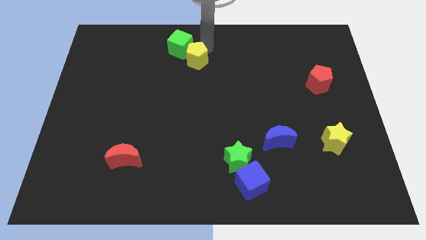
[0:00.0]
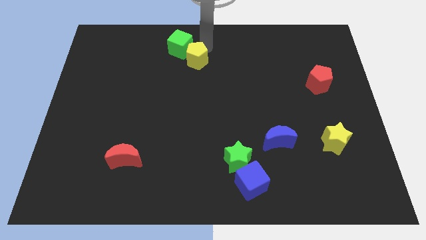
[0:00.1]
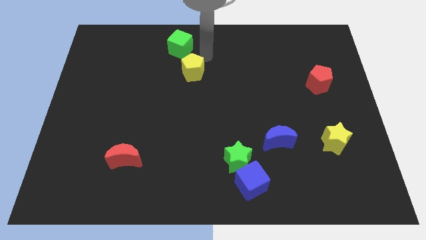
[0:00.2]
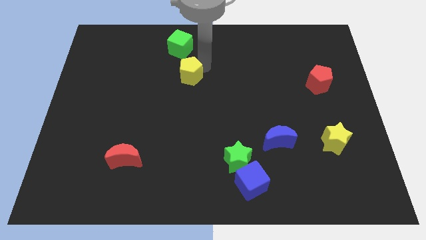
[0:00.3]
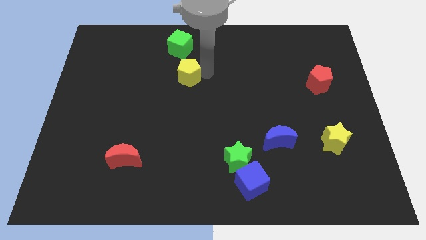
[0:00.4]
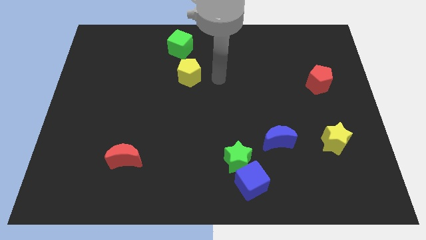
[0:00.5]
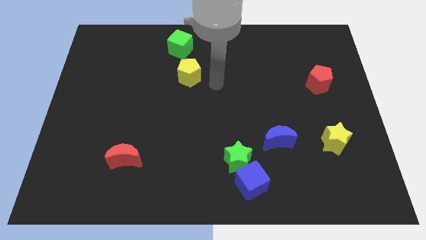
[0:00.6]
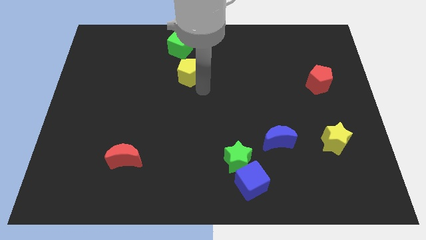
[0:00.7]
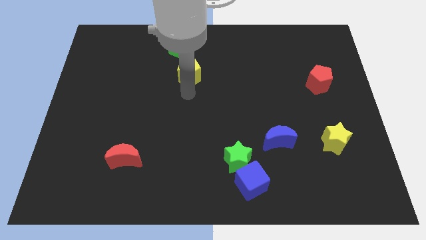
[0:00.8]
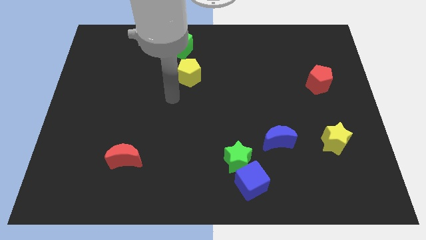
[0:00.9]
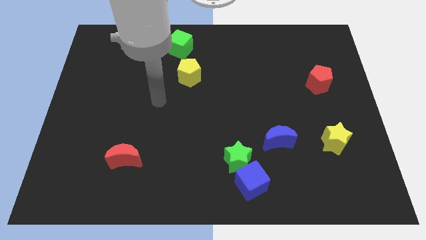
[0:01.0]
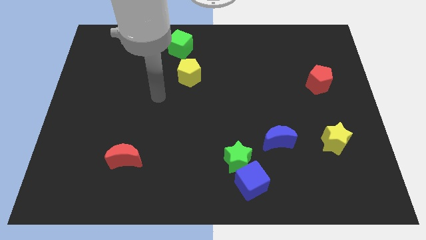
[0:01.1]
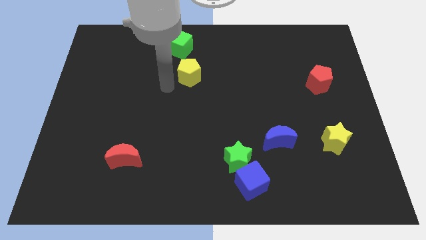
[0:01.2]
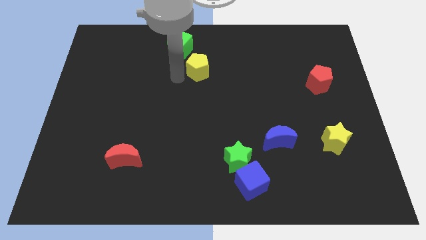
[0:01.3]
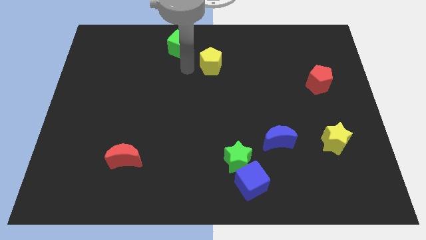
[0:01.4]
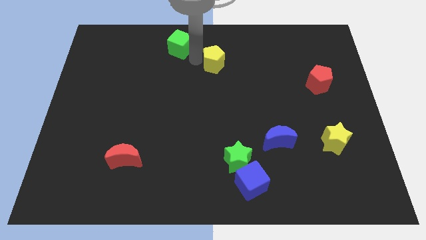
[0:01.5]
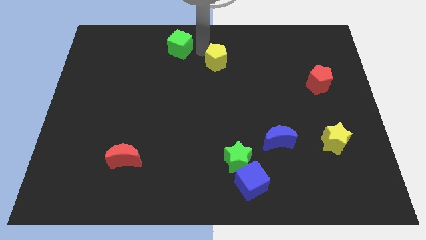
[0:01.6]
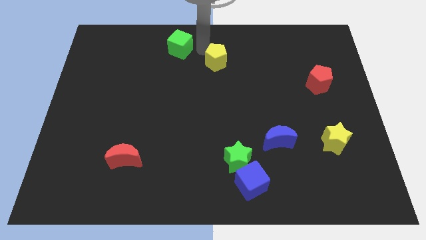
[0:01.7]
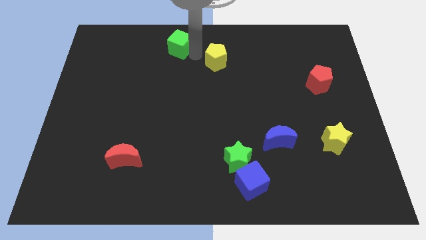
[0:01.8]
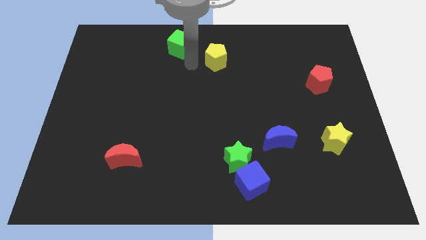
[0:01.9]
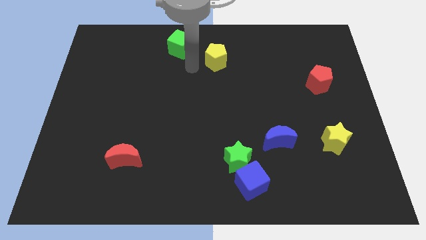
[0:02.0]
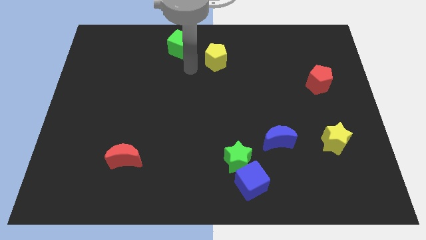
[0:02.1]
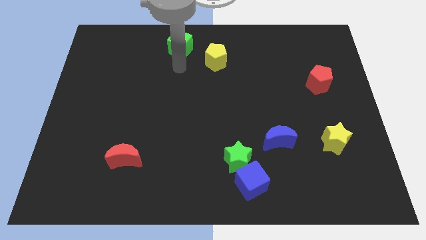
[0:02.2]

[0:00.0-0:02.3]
move the yellow pentagon towards top center

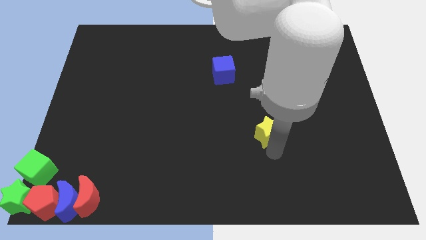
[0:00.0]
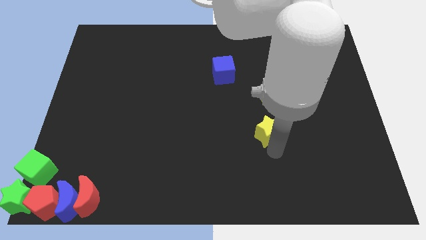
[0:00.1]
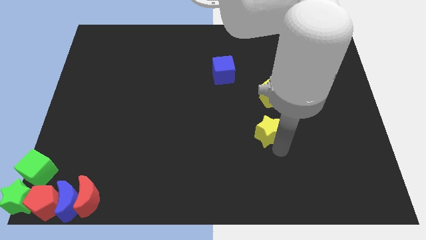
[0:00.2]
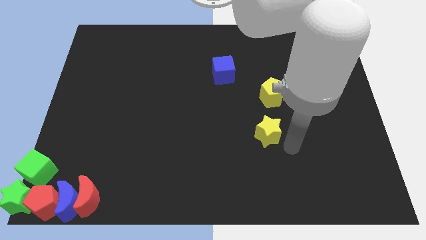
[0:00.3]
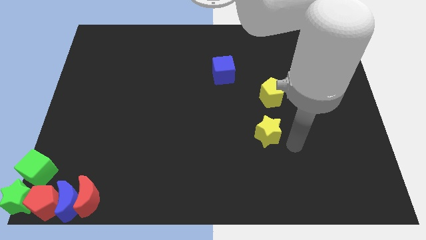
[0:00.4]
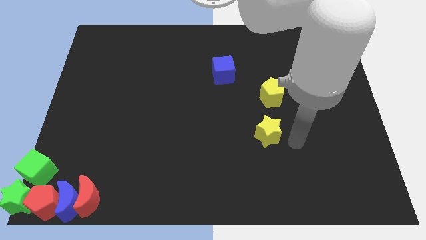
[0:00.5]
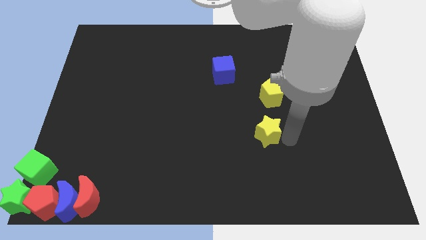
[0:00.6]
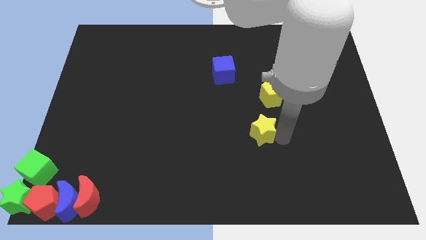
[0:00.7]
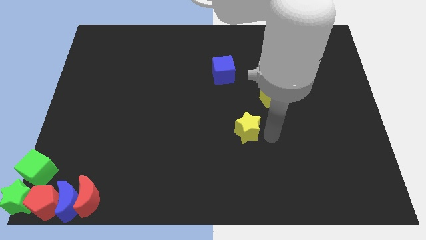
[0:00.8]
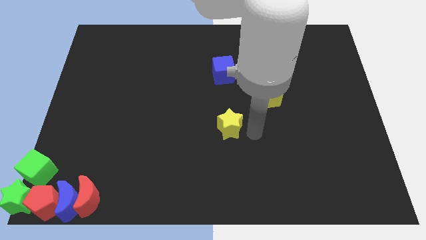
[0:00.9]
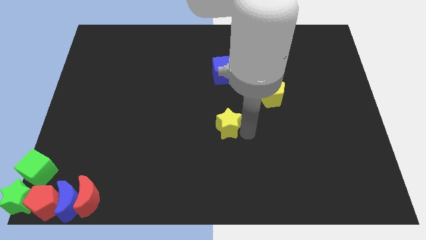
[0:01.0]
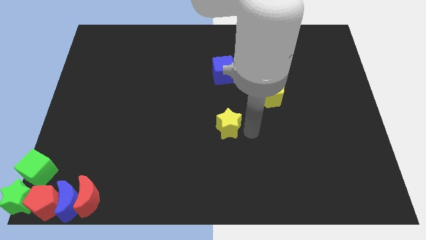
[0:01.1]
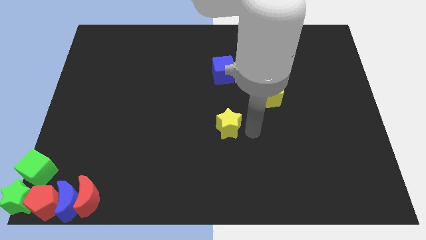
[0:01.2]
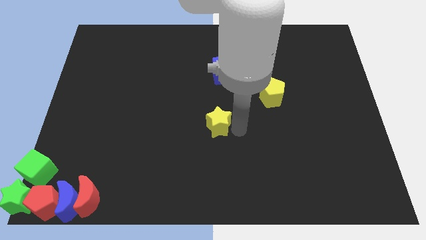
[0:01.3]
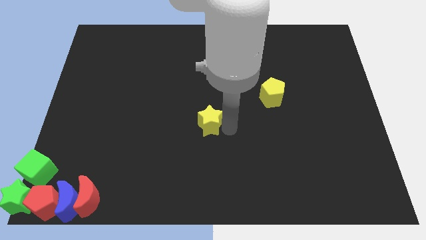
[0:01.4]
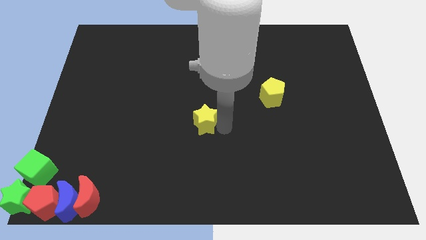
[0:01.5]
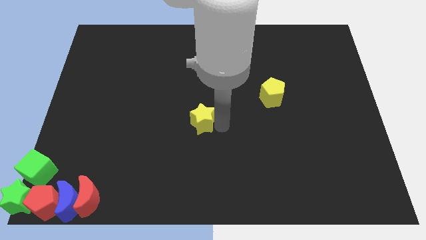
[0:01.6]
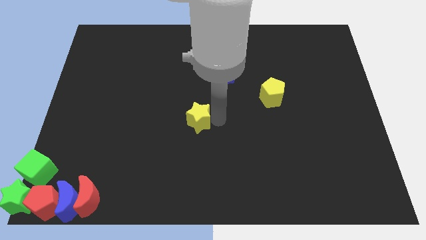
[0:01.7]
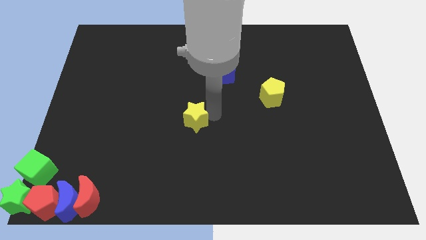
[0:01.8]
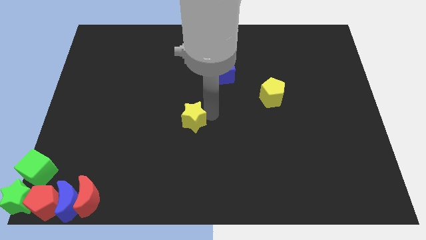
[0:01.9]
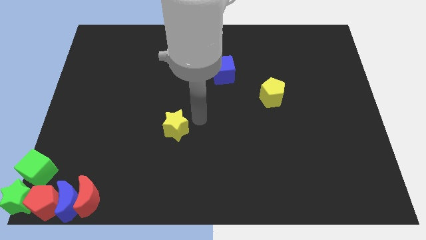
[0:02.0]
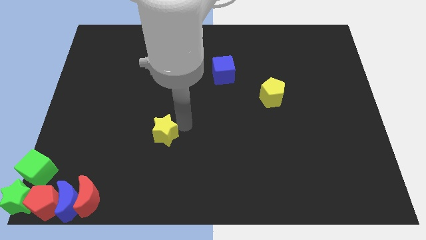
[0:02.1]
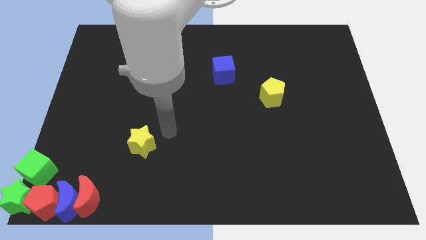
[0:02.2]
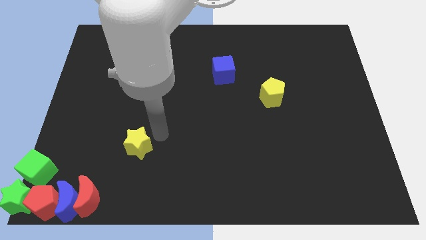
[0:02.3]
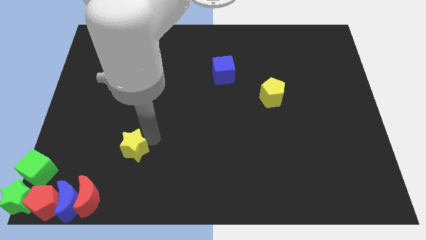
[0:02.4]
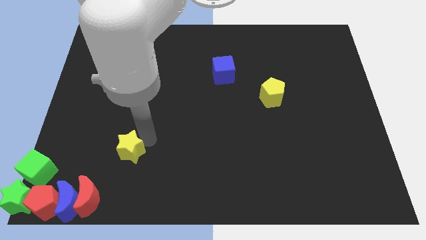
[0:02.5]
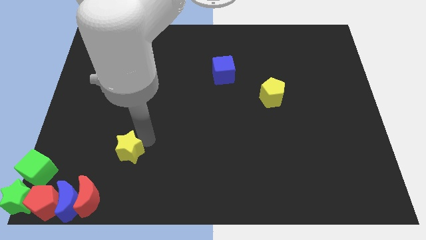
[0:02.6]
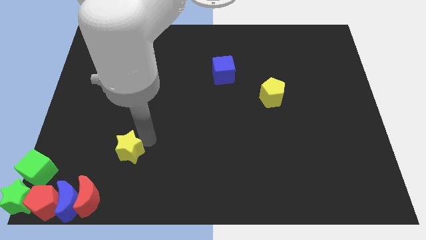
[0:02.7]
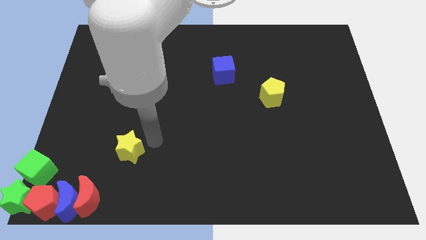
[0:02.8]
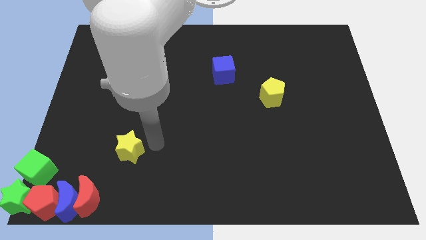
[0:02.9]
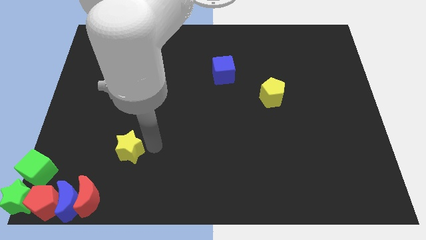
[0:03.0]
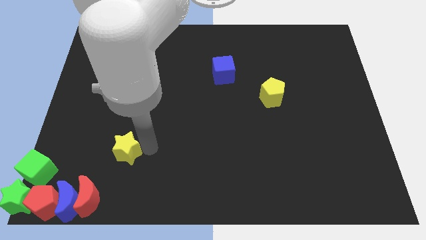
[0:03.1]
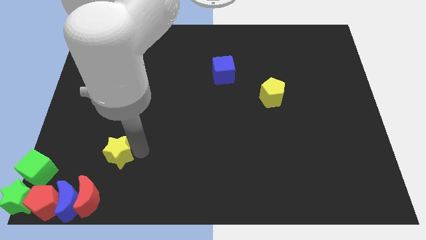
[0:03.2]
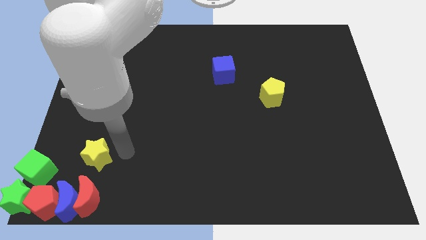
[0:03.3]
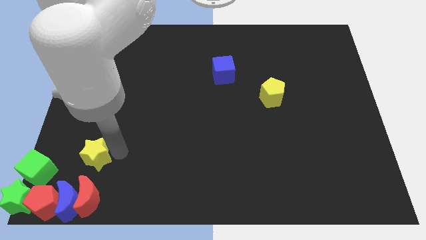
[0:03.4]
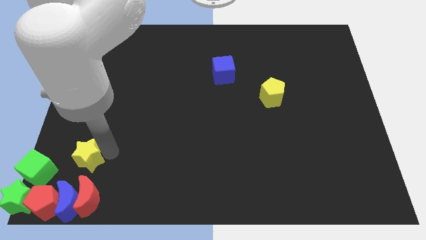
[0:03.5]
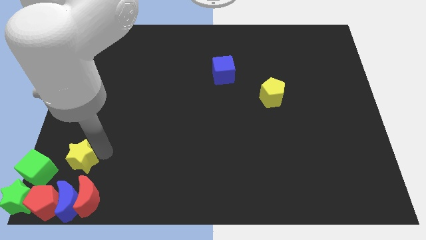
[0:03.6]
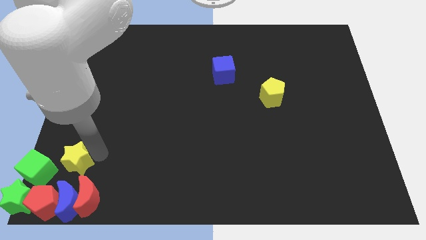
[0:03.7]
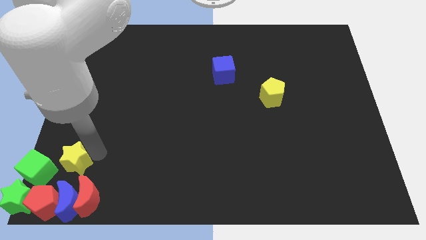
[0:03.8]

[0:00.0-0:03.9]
place the yellow star above the red moon

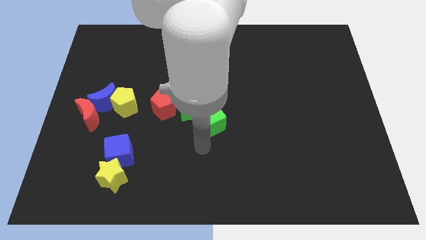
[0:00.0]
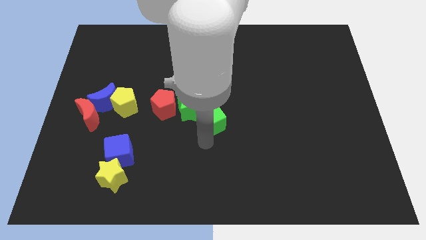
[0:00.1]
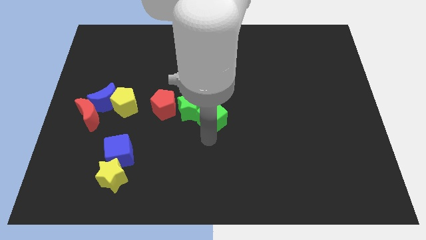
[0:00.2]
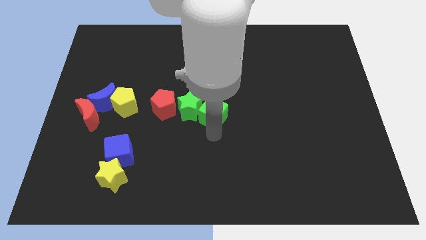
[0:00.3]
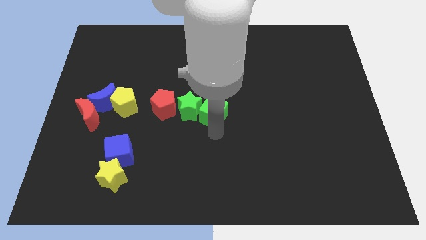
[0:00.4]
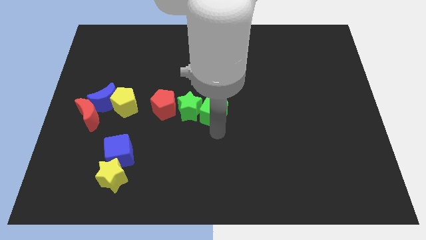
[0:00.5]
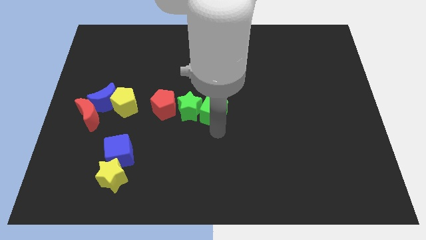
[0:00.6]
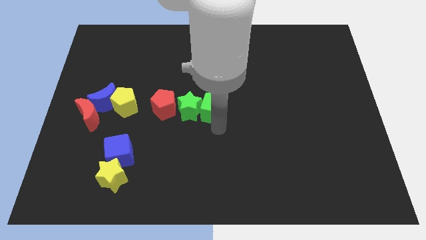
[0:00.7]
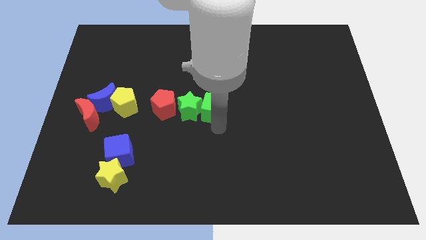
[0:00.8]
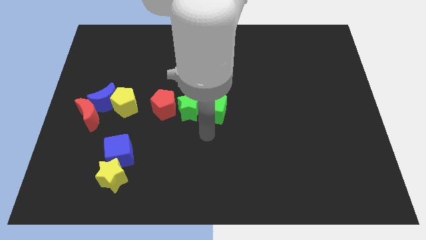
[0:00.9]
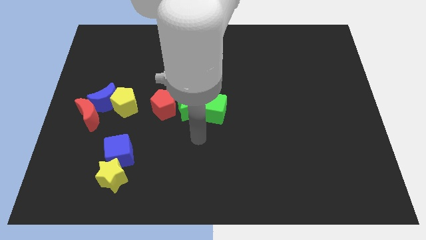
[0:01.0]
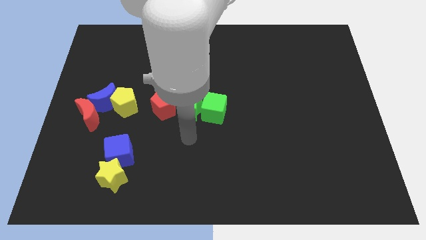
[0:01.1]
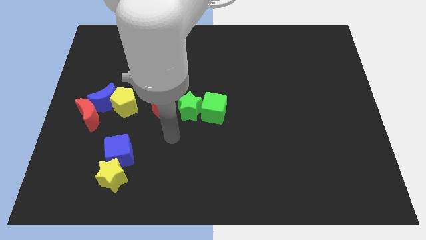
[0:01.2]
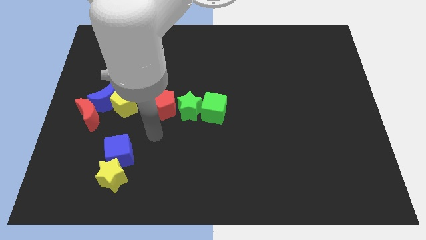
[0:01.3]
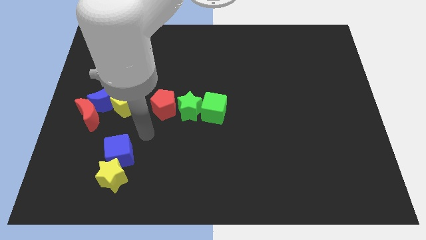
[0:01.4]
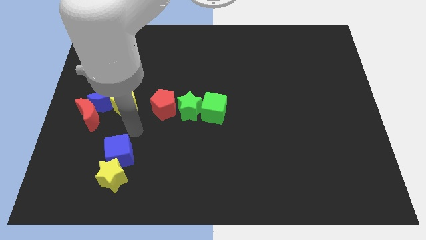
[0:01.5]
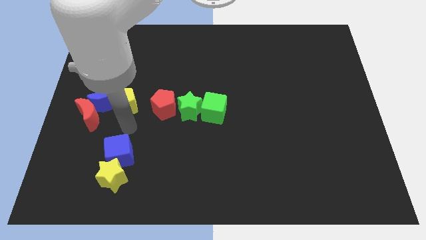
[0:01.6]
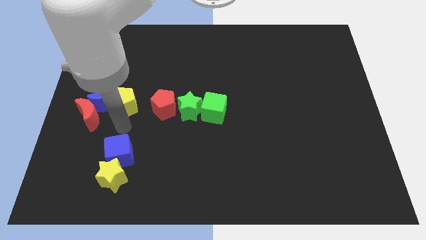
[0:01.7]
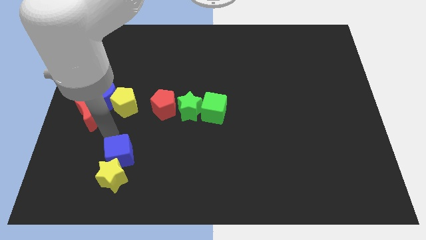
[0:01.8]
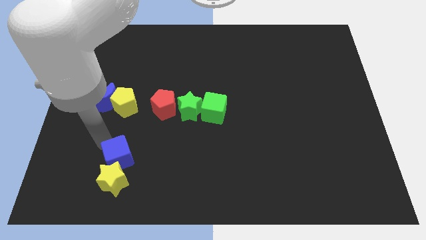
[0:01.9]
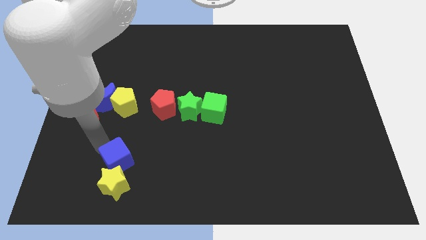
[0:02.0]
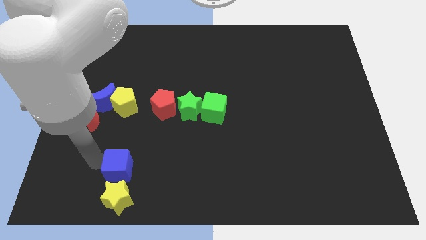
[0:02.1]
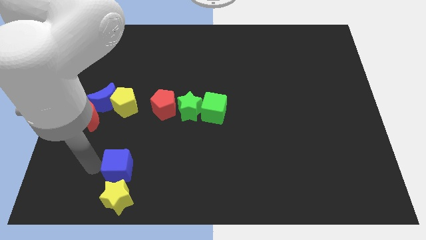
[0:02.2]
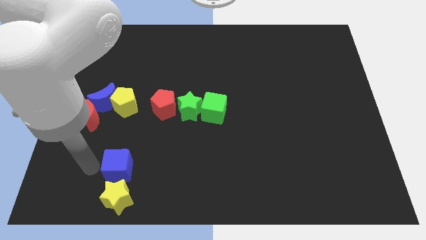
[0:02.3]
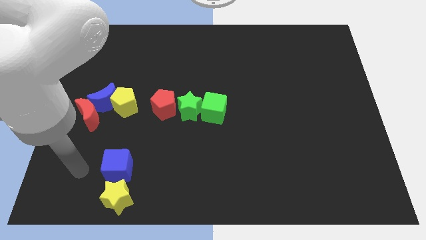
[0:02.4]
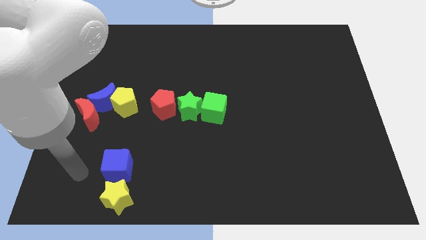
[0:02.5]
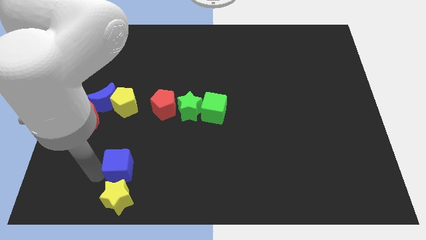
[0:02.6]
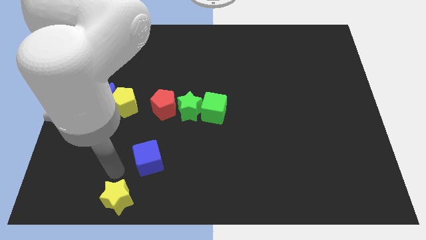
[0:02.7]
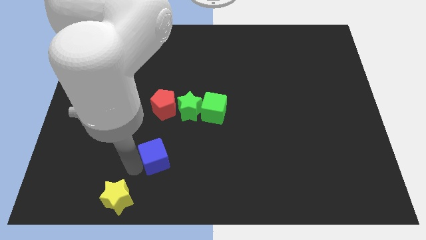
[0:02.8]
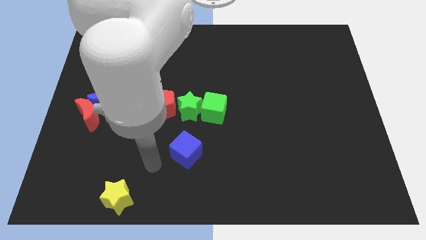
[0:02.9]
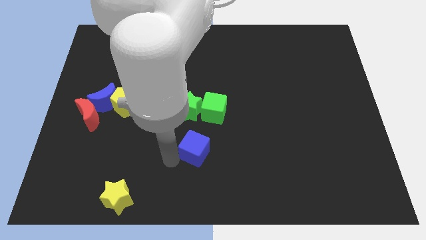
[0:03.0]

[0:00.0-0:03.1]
push the blue cube into the yellow star
